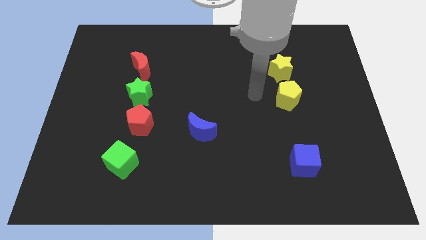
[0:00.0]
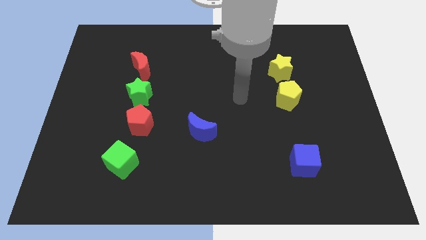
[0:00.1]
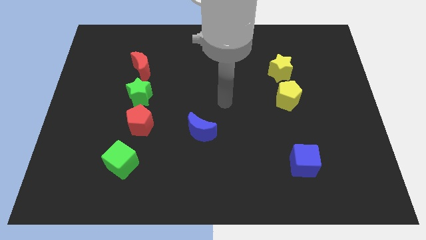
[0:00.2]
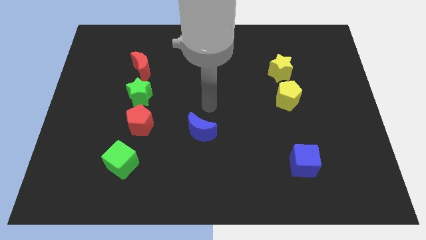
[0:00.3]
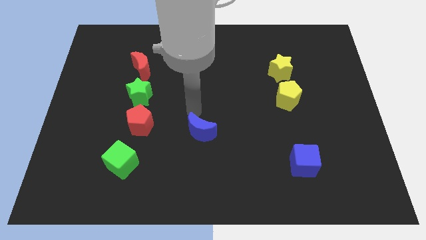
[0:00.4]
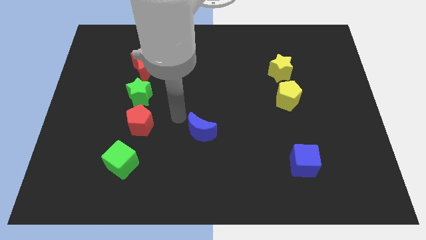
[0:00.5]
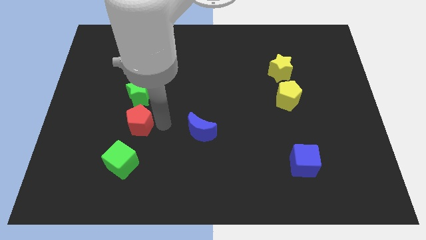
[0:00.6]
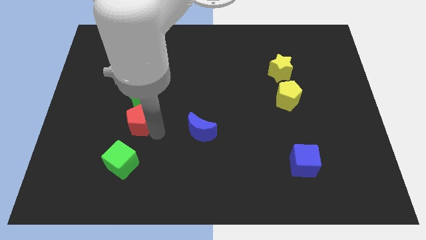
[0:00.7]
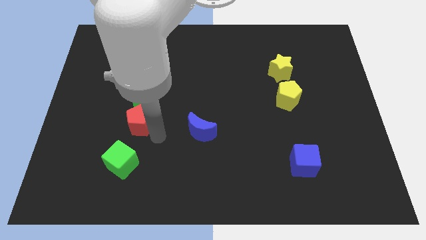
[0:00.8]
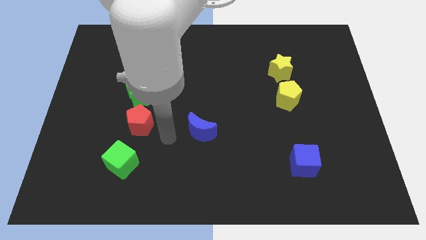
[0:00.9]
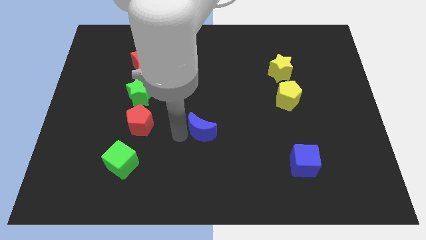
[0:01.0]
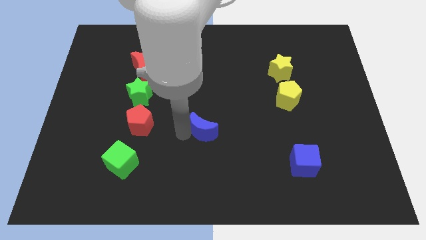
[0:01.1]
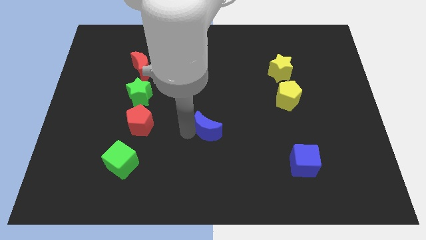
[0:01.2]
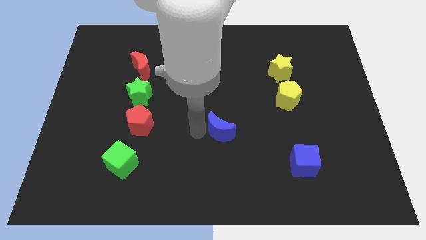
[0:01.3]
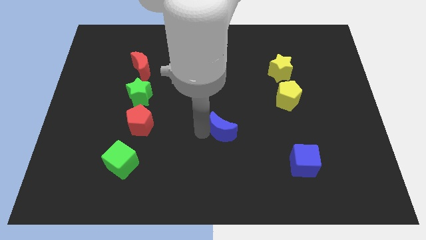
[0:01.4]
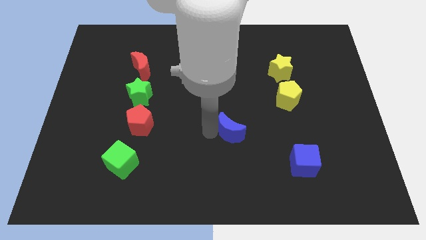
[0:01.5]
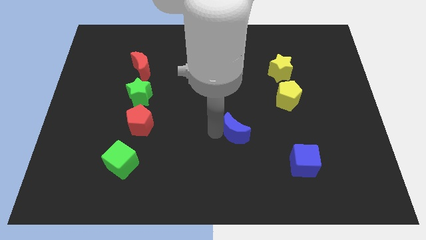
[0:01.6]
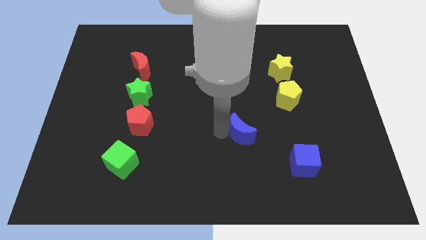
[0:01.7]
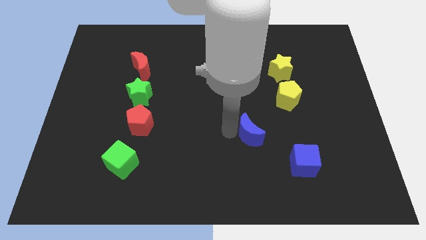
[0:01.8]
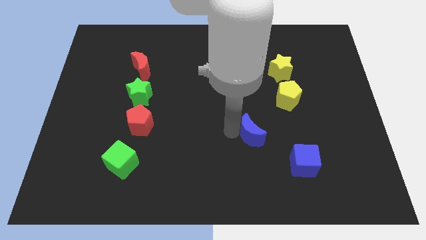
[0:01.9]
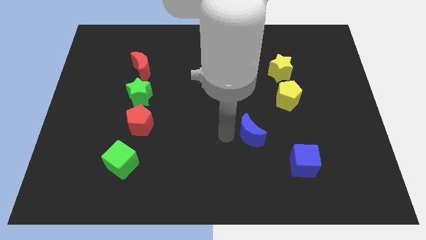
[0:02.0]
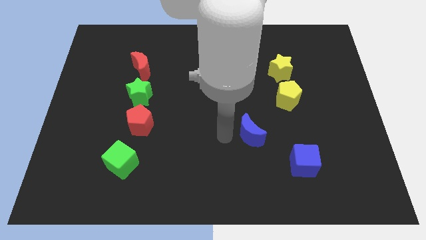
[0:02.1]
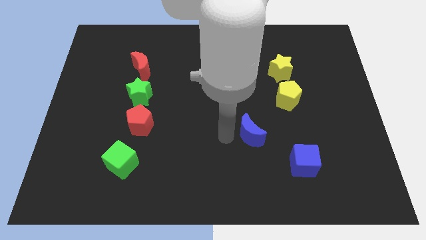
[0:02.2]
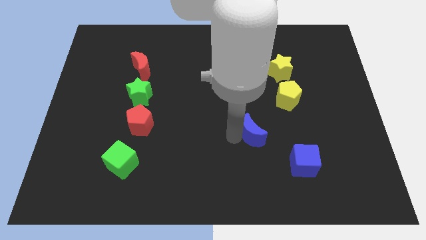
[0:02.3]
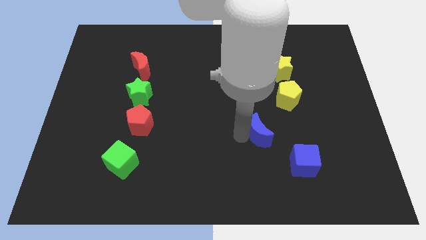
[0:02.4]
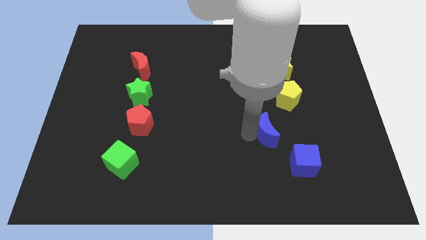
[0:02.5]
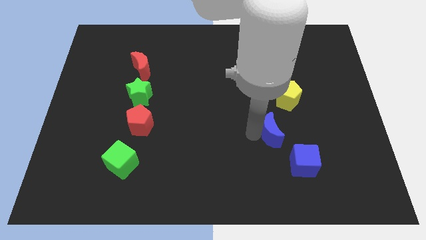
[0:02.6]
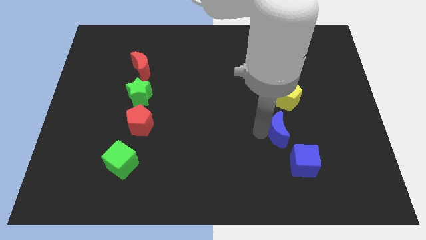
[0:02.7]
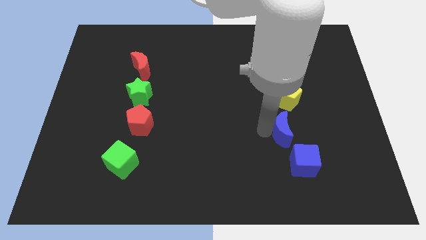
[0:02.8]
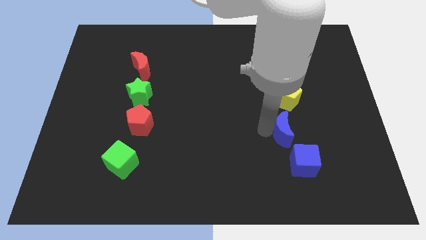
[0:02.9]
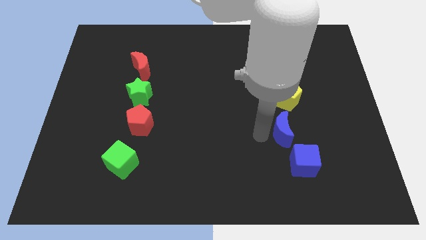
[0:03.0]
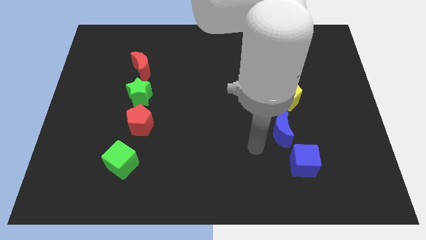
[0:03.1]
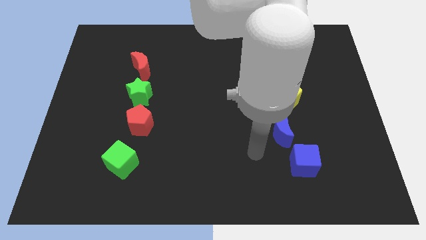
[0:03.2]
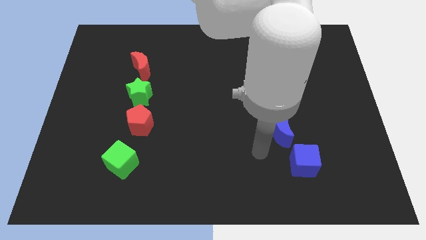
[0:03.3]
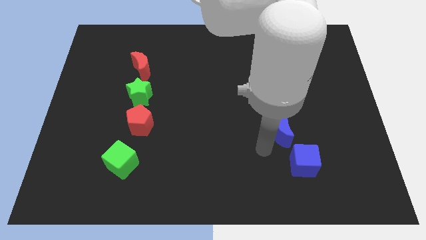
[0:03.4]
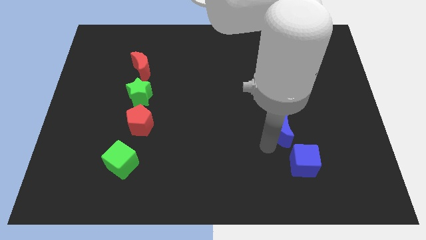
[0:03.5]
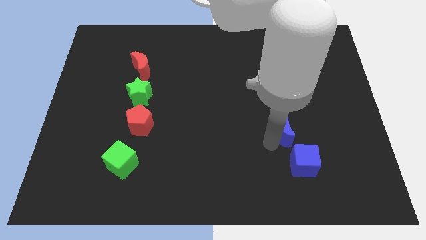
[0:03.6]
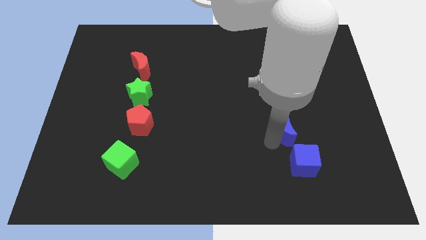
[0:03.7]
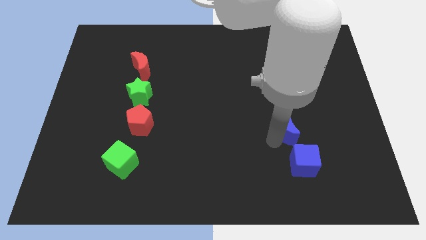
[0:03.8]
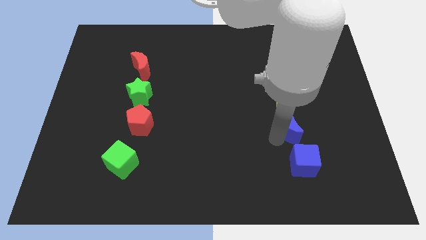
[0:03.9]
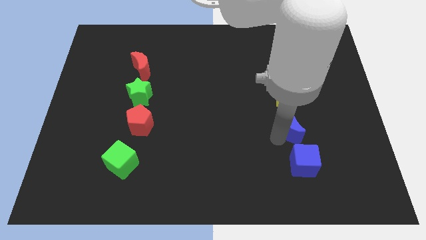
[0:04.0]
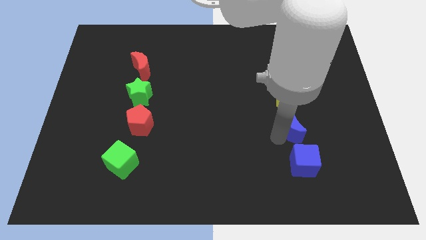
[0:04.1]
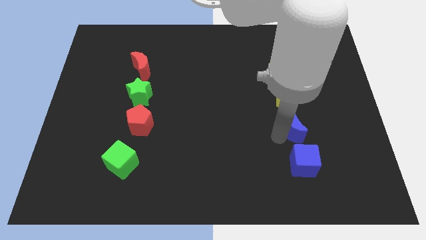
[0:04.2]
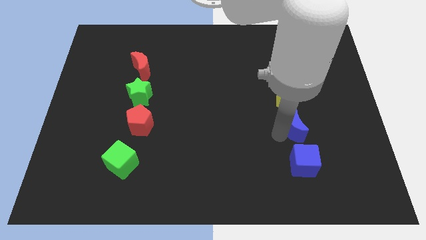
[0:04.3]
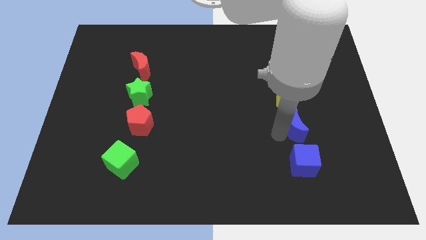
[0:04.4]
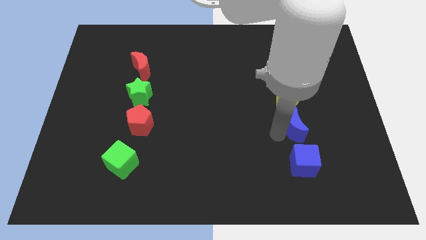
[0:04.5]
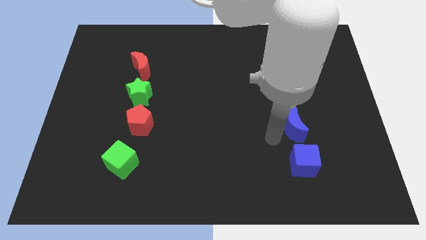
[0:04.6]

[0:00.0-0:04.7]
place the blue crescent in between the blue cube and the yellow pentagon

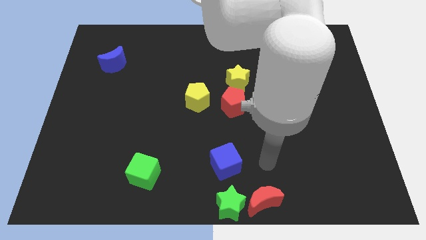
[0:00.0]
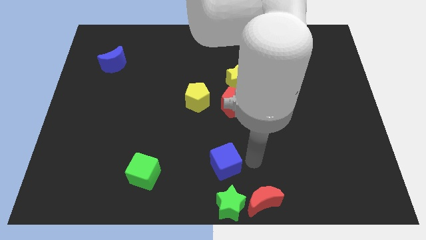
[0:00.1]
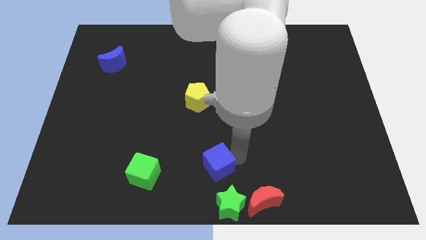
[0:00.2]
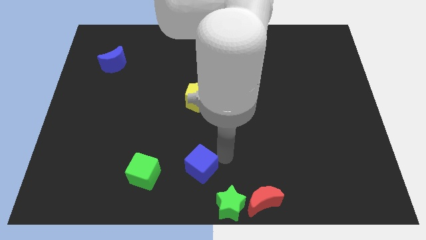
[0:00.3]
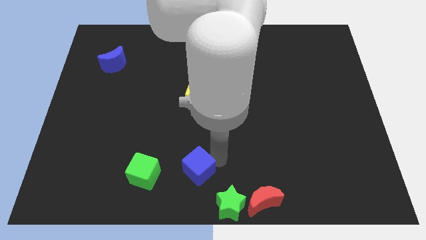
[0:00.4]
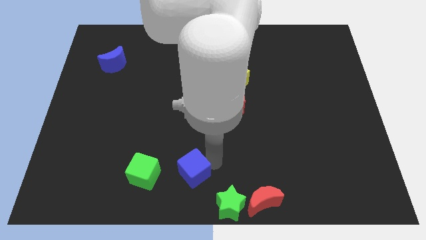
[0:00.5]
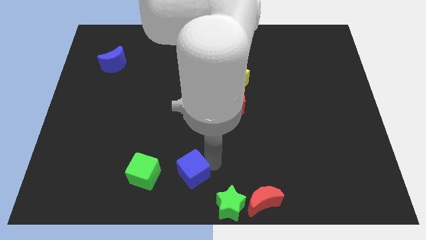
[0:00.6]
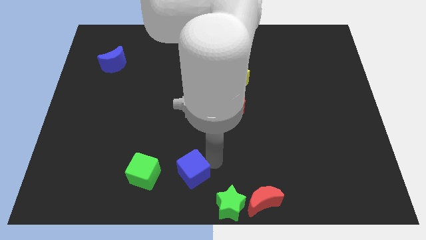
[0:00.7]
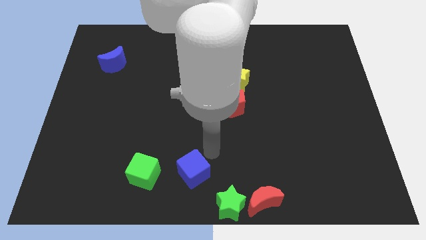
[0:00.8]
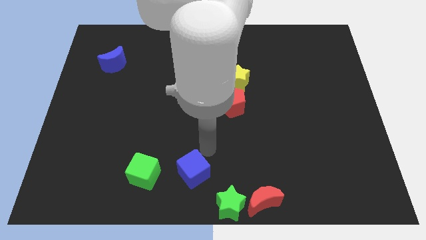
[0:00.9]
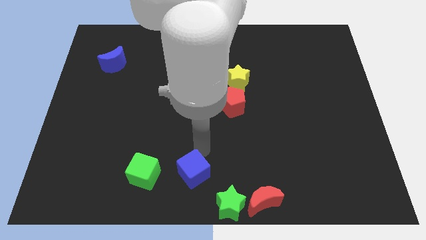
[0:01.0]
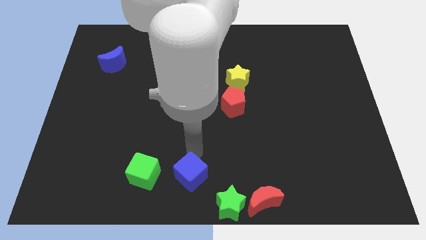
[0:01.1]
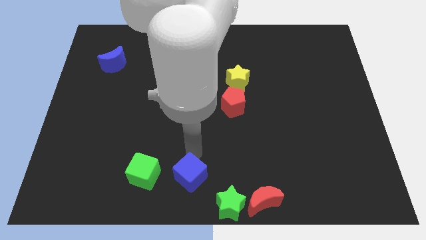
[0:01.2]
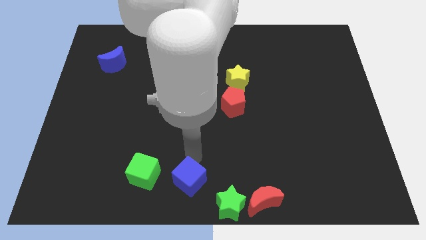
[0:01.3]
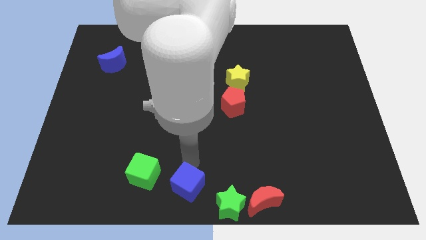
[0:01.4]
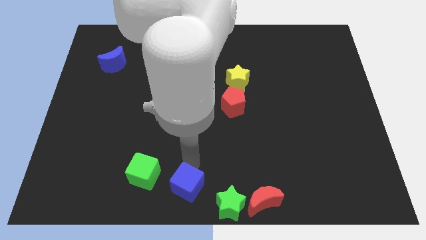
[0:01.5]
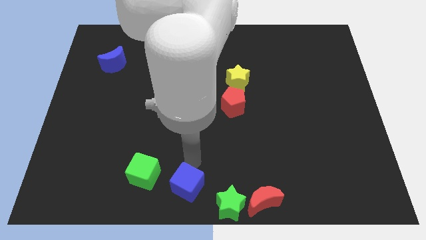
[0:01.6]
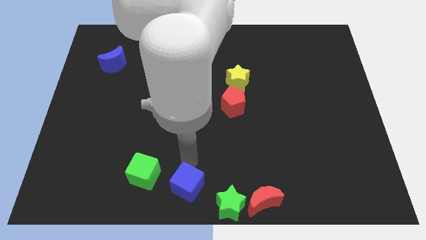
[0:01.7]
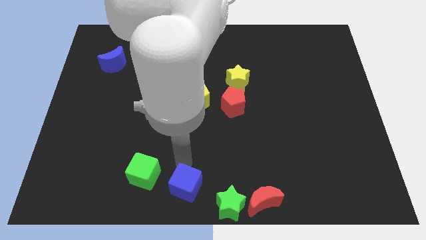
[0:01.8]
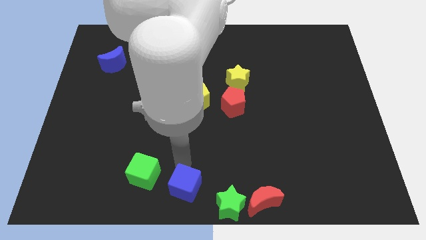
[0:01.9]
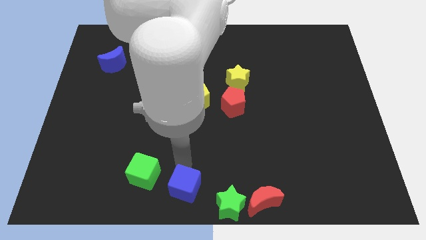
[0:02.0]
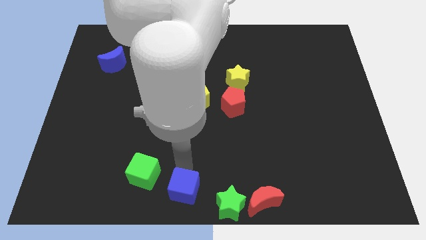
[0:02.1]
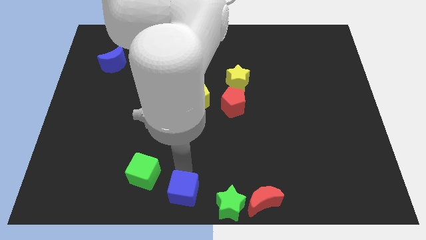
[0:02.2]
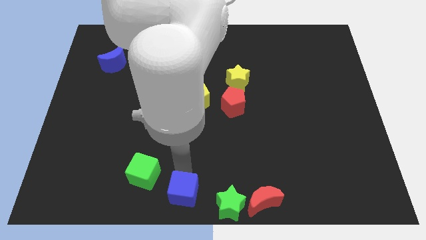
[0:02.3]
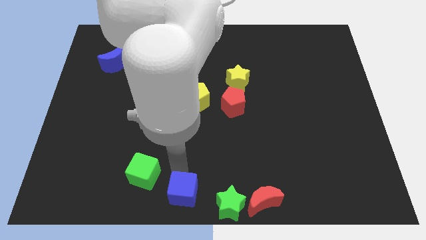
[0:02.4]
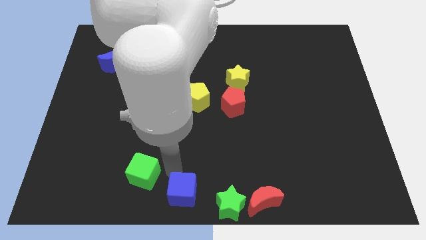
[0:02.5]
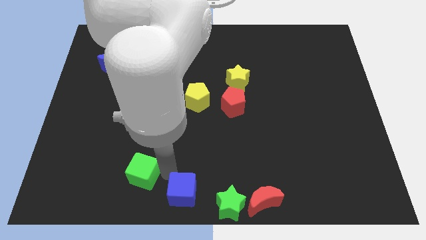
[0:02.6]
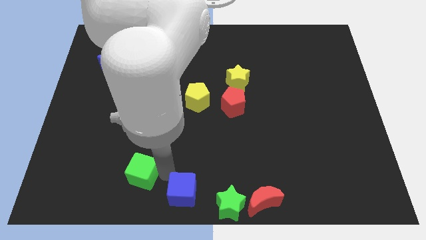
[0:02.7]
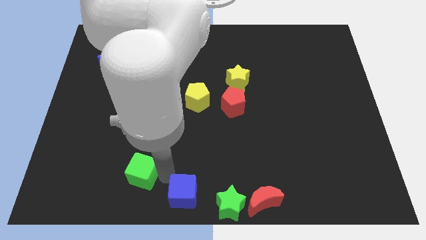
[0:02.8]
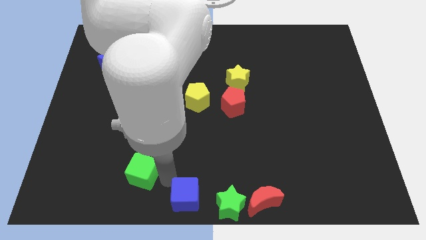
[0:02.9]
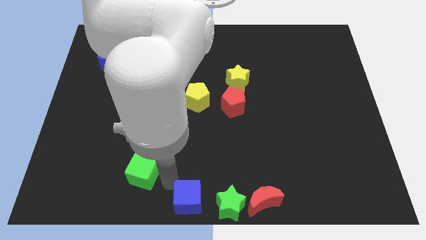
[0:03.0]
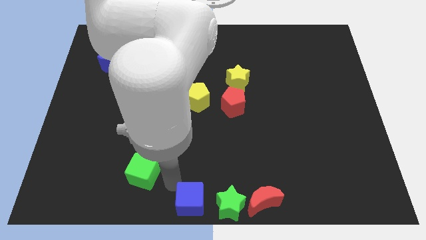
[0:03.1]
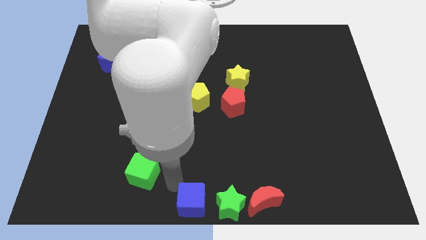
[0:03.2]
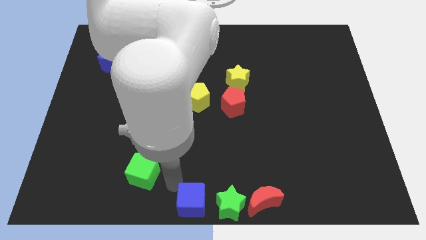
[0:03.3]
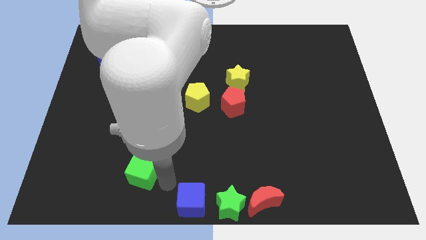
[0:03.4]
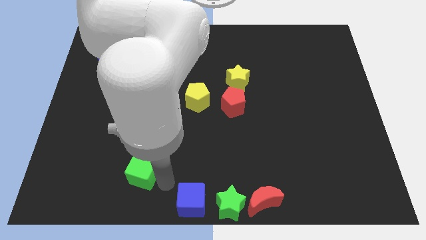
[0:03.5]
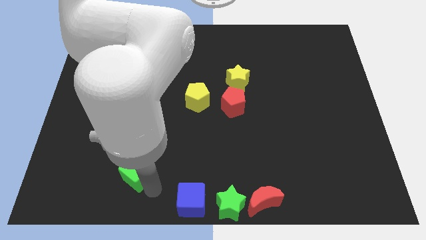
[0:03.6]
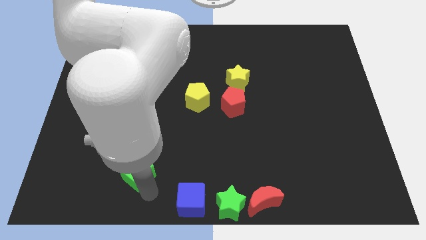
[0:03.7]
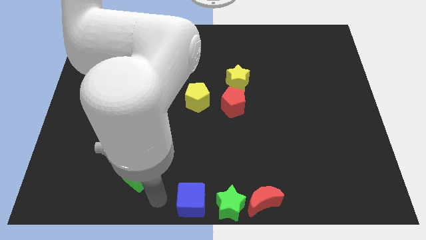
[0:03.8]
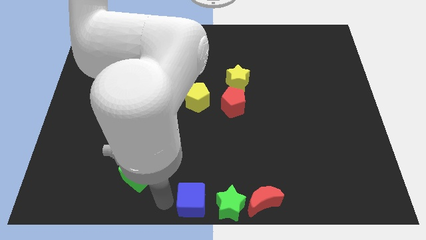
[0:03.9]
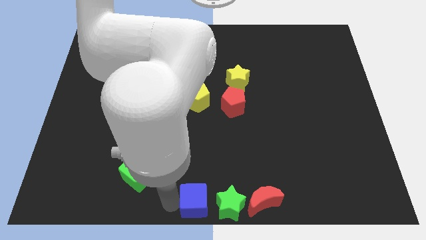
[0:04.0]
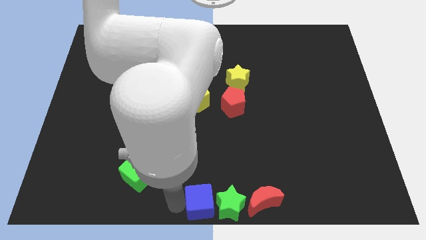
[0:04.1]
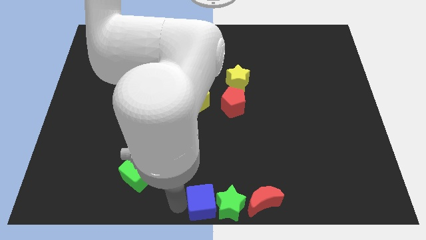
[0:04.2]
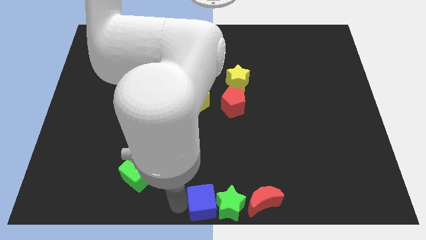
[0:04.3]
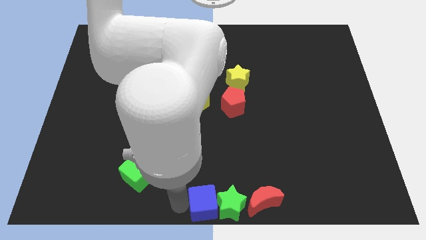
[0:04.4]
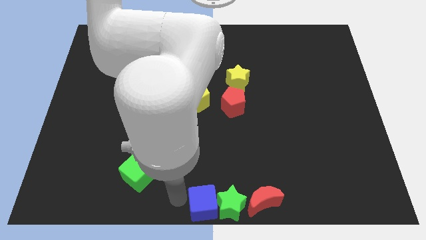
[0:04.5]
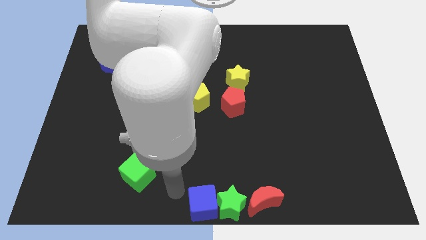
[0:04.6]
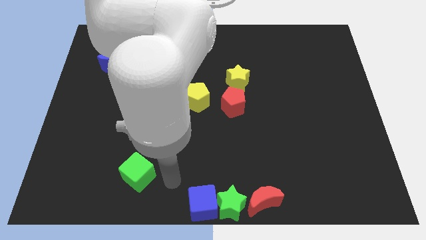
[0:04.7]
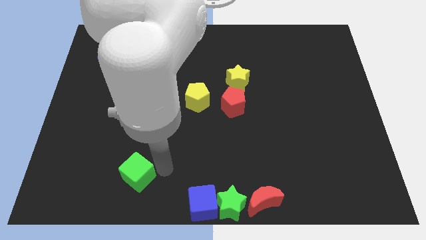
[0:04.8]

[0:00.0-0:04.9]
move the blue cube to the left of the green star
